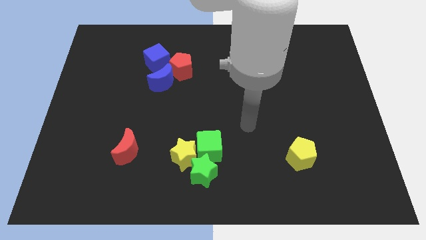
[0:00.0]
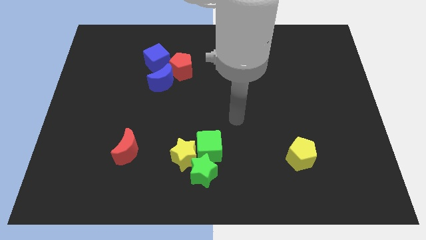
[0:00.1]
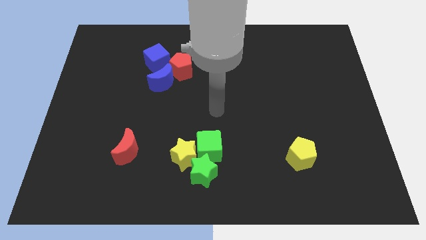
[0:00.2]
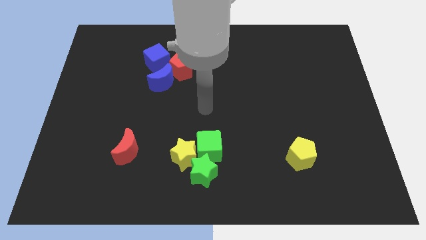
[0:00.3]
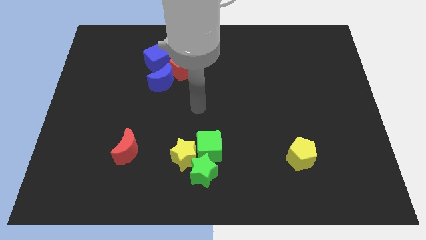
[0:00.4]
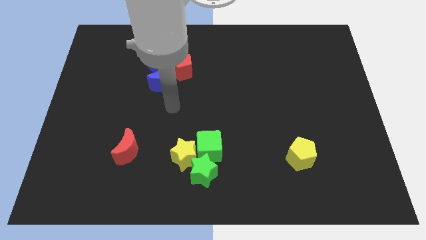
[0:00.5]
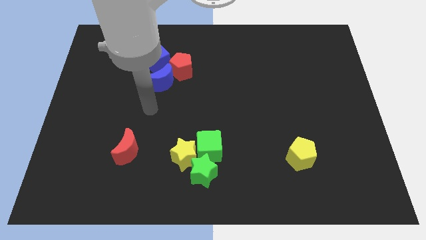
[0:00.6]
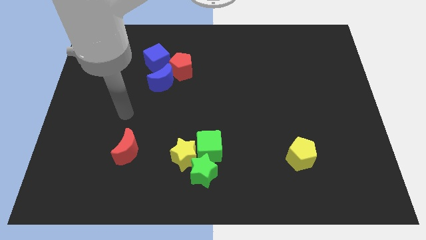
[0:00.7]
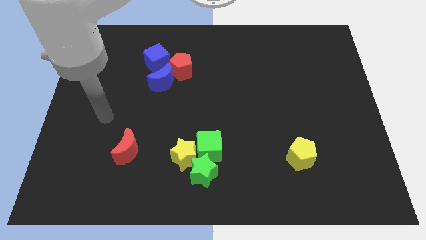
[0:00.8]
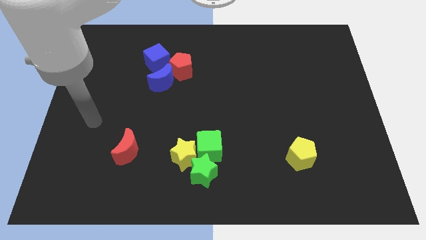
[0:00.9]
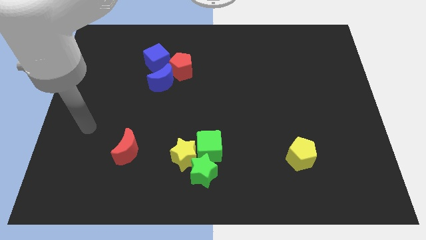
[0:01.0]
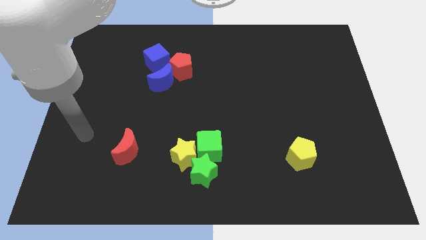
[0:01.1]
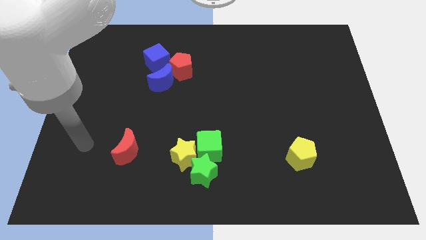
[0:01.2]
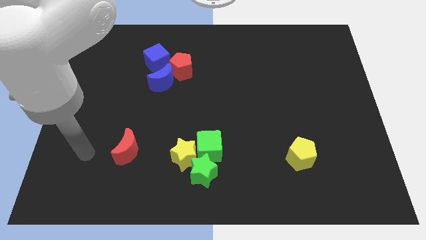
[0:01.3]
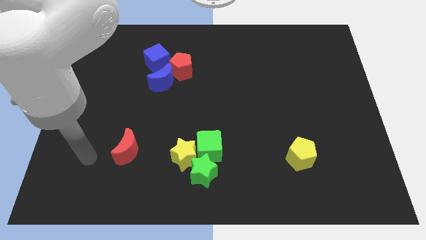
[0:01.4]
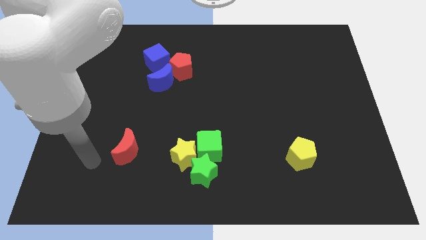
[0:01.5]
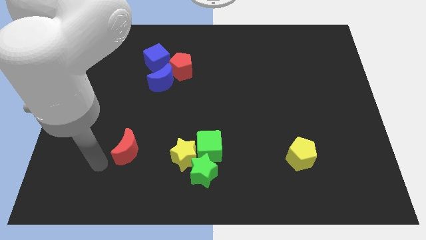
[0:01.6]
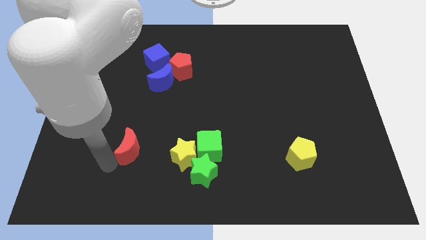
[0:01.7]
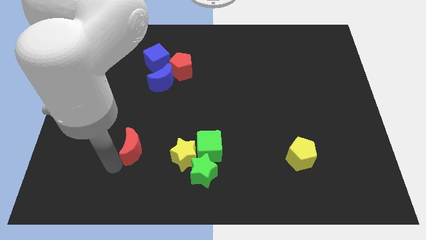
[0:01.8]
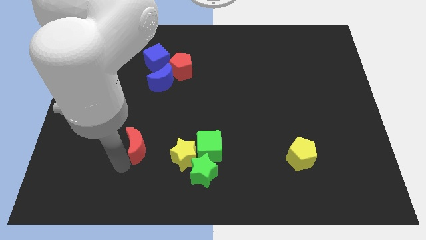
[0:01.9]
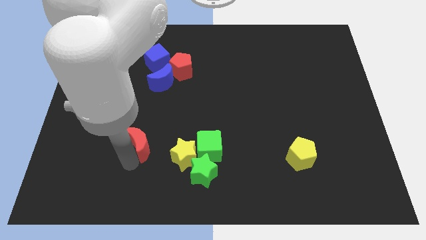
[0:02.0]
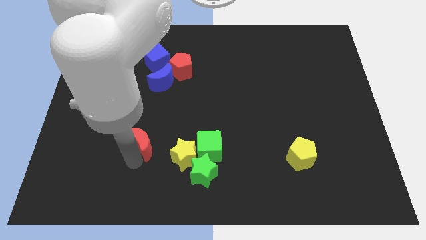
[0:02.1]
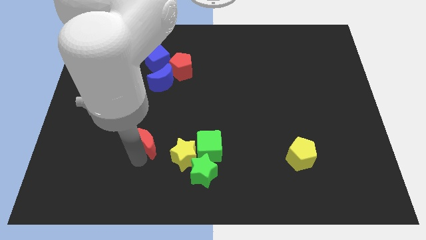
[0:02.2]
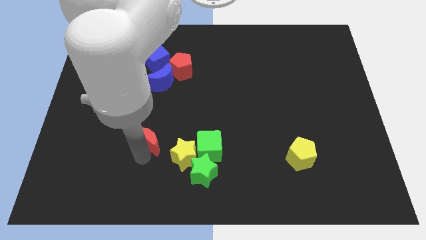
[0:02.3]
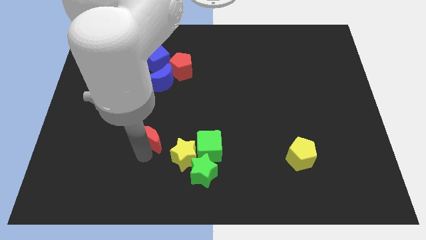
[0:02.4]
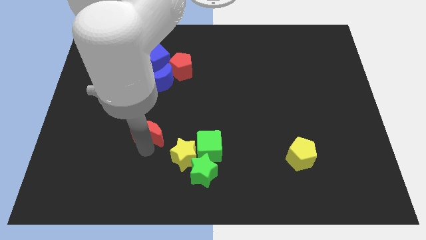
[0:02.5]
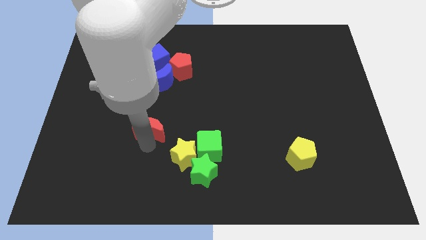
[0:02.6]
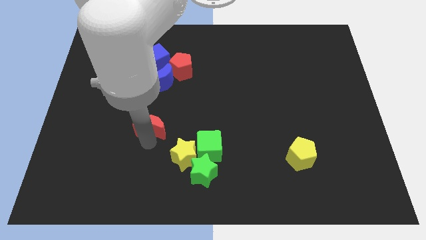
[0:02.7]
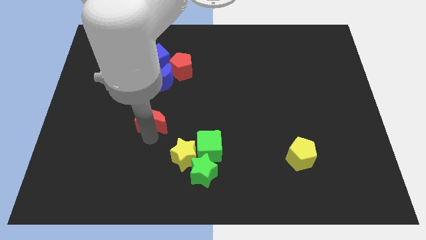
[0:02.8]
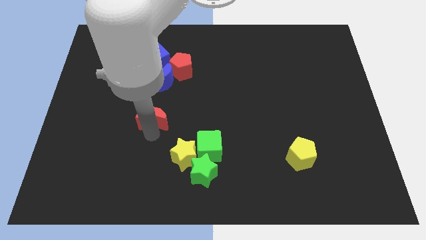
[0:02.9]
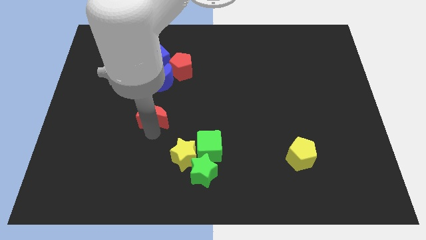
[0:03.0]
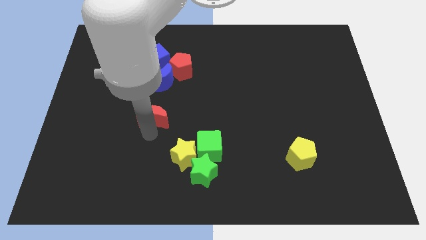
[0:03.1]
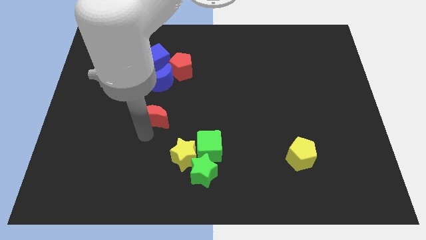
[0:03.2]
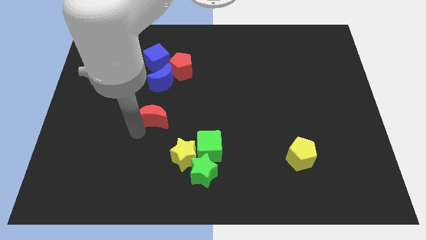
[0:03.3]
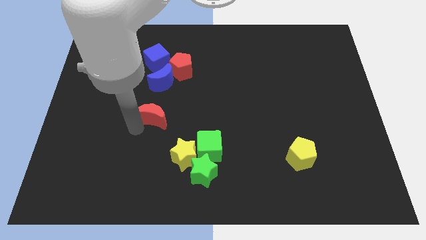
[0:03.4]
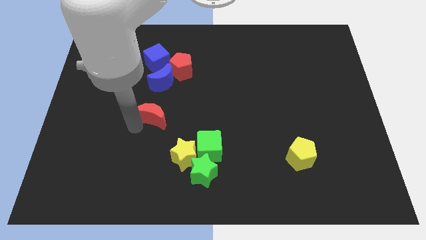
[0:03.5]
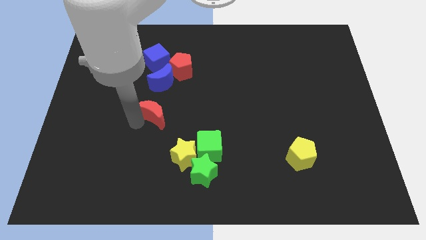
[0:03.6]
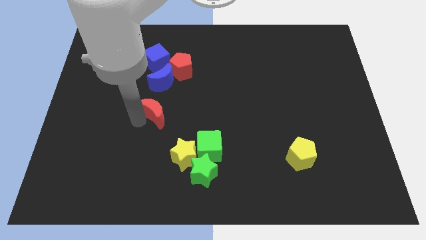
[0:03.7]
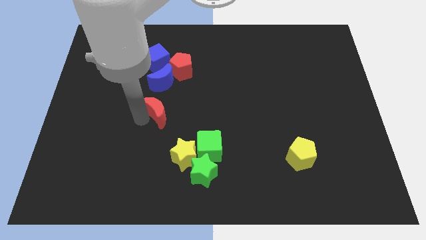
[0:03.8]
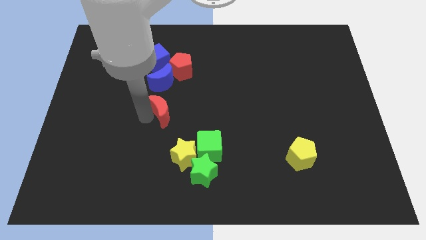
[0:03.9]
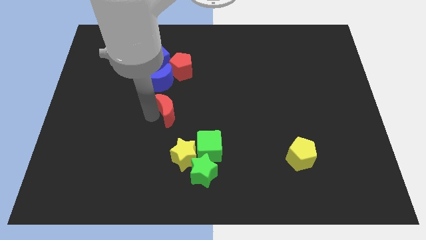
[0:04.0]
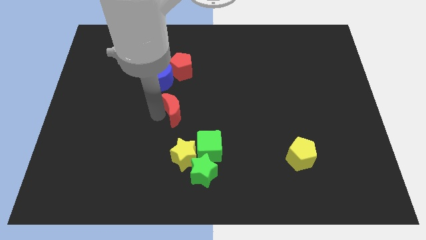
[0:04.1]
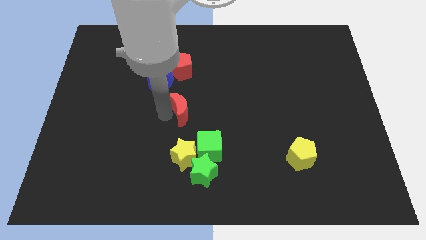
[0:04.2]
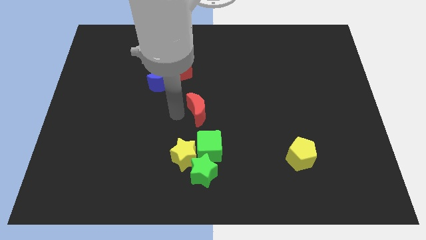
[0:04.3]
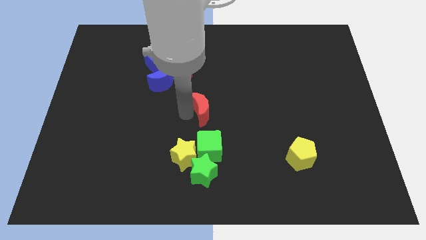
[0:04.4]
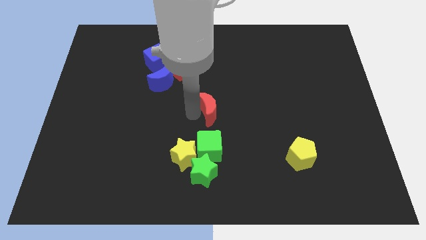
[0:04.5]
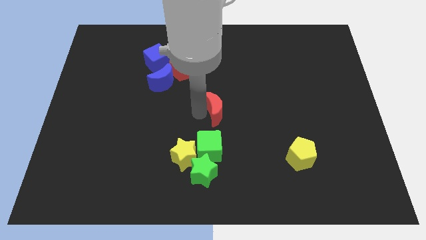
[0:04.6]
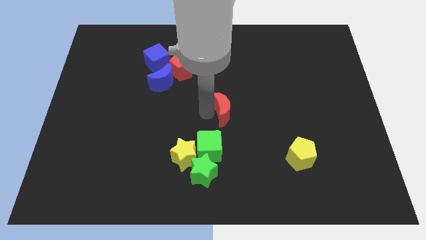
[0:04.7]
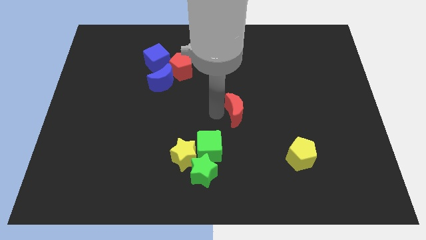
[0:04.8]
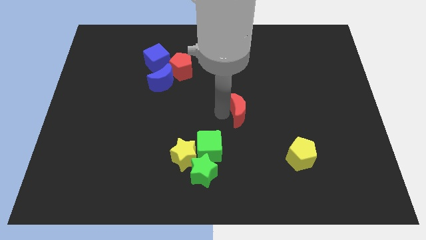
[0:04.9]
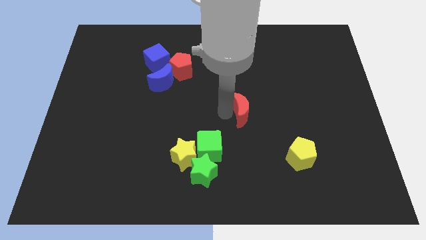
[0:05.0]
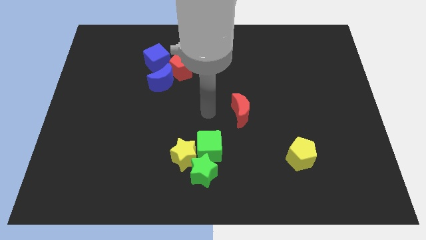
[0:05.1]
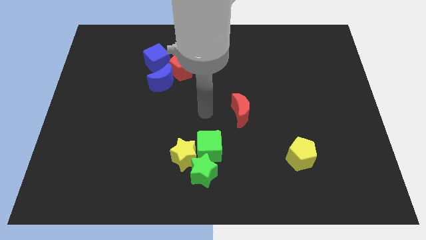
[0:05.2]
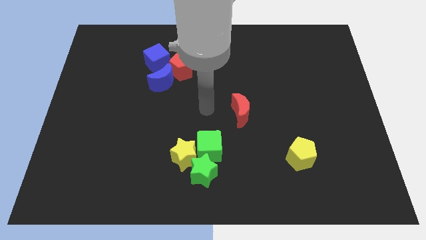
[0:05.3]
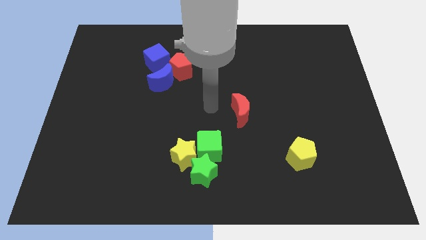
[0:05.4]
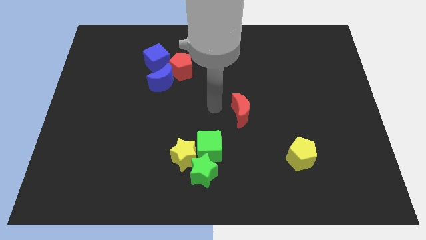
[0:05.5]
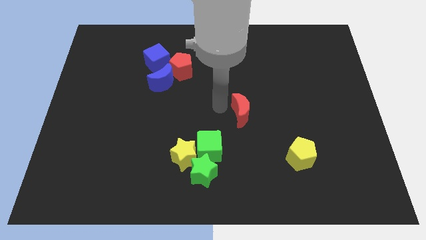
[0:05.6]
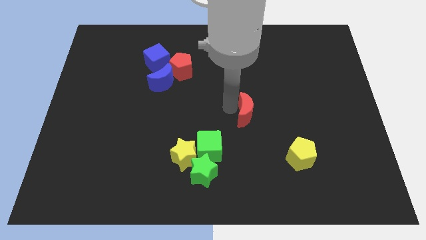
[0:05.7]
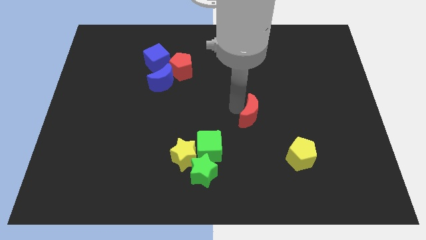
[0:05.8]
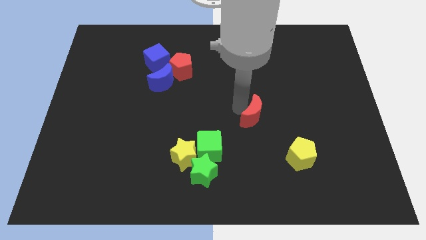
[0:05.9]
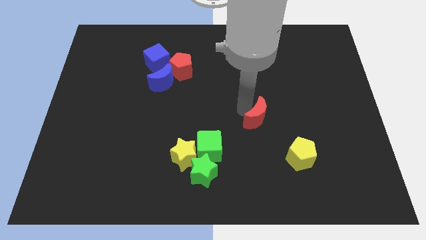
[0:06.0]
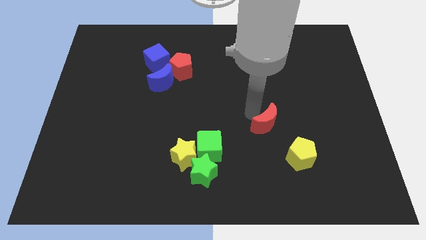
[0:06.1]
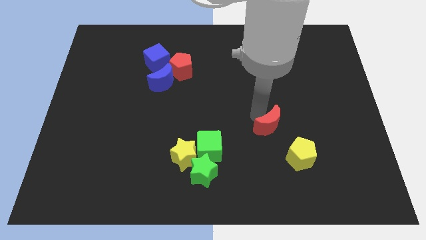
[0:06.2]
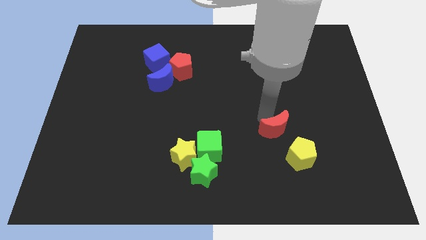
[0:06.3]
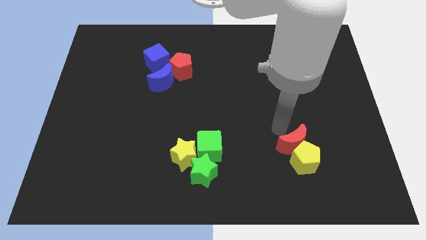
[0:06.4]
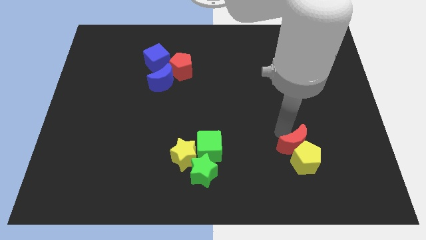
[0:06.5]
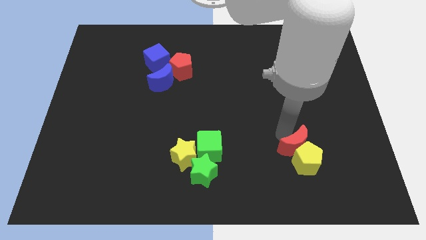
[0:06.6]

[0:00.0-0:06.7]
put the red moon next to the yellow pentagon

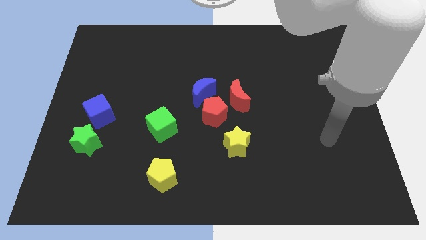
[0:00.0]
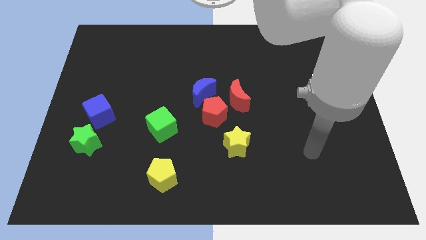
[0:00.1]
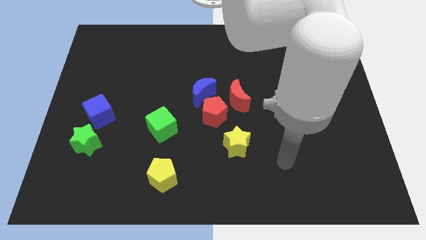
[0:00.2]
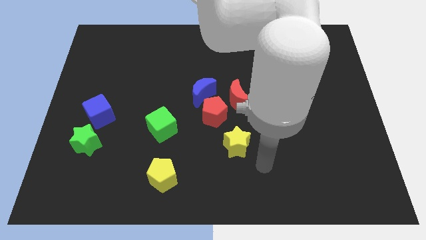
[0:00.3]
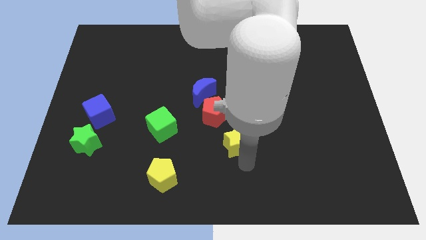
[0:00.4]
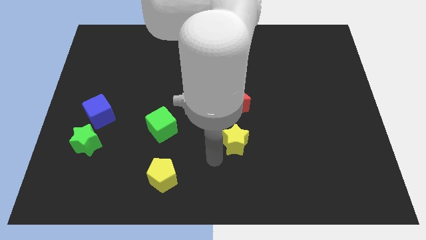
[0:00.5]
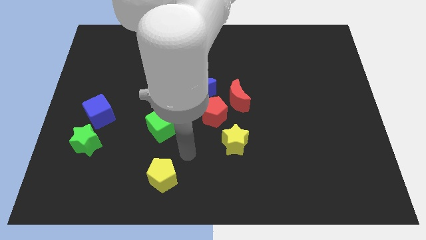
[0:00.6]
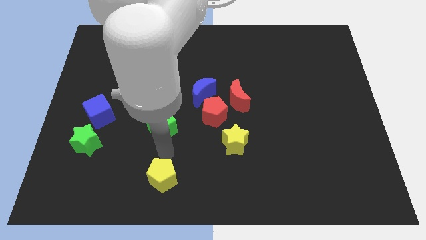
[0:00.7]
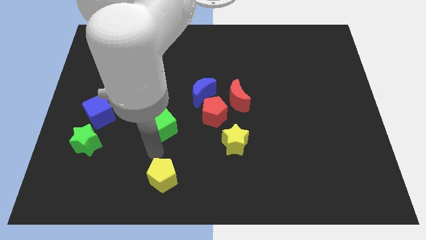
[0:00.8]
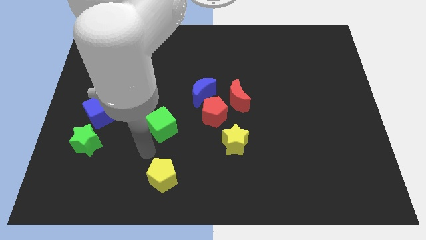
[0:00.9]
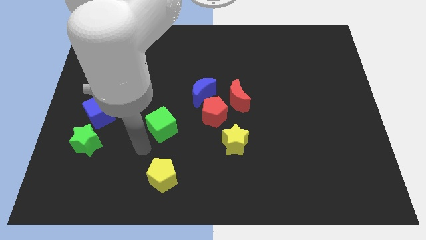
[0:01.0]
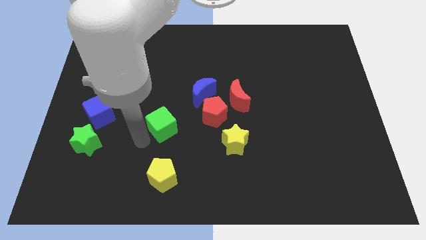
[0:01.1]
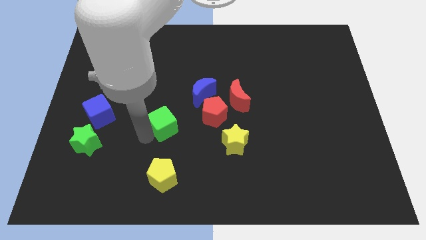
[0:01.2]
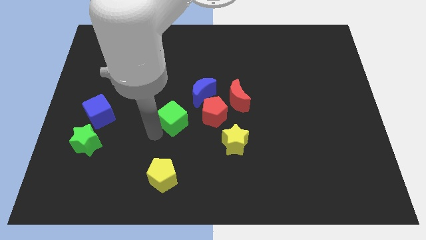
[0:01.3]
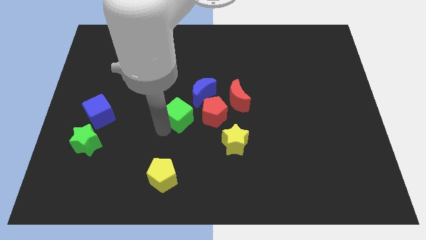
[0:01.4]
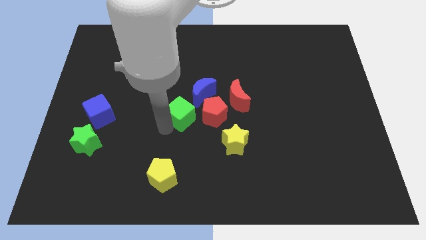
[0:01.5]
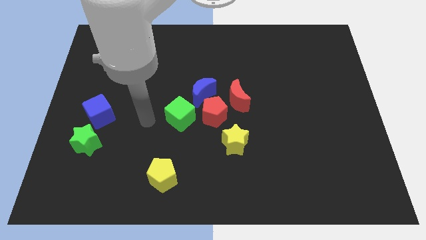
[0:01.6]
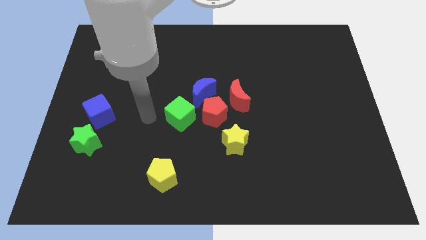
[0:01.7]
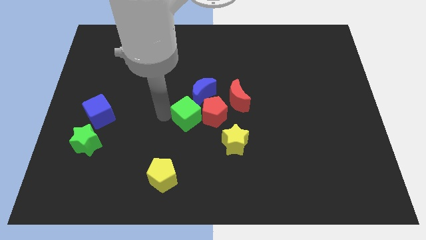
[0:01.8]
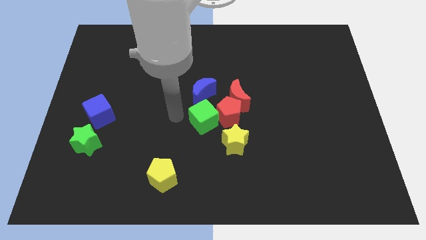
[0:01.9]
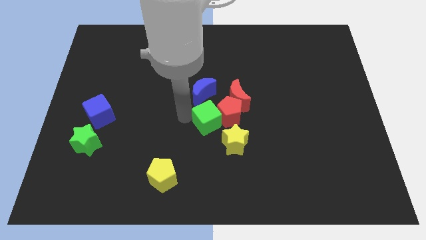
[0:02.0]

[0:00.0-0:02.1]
slide the green cube to the red pentagon
